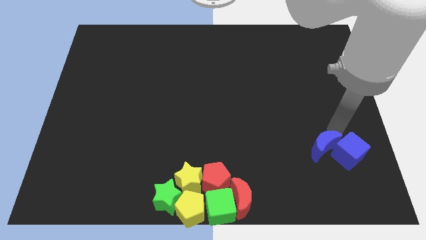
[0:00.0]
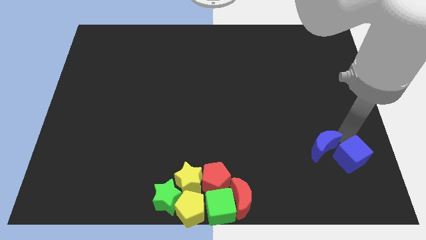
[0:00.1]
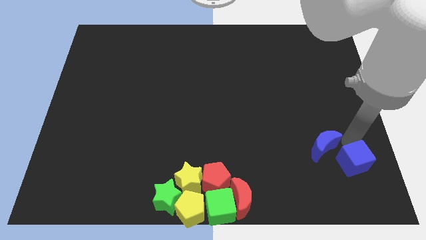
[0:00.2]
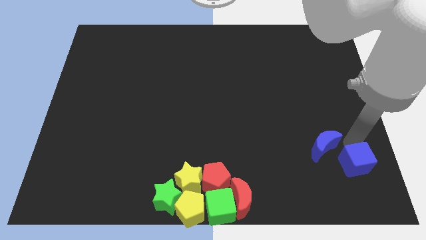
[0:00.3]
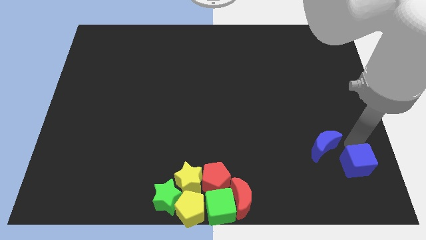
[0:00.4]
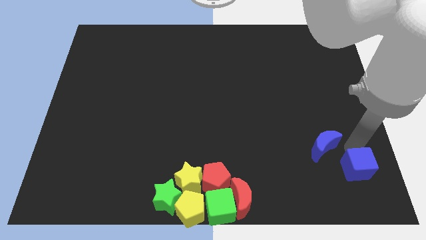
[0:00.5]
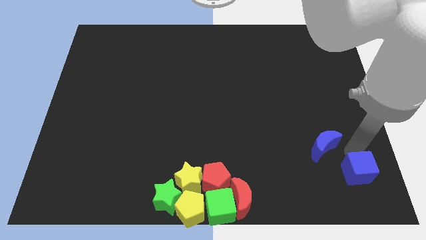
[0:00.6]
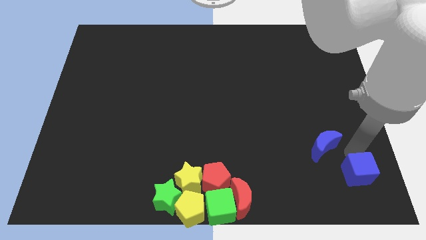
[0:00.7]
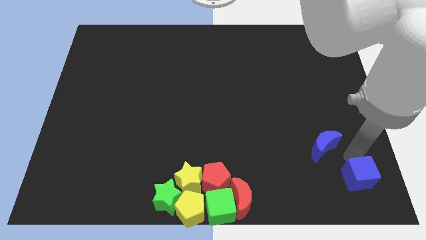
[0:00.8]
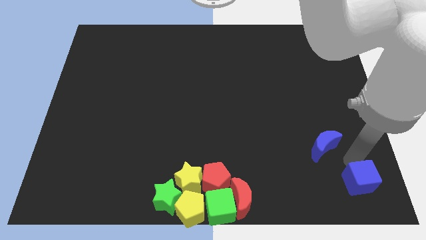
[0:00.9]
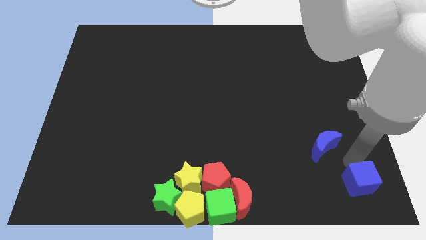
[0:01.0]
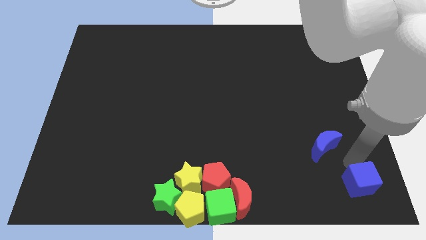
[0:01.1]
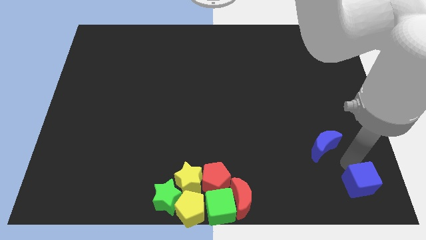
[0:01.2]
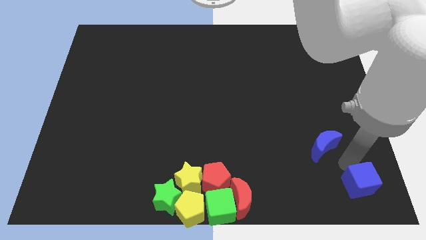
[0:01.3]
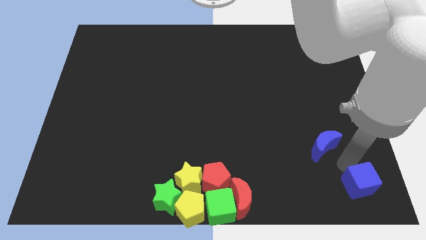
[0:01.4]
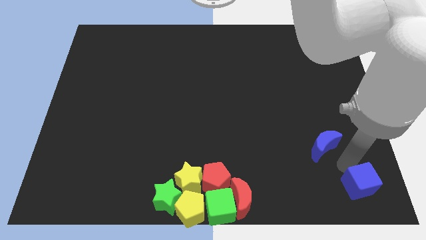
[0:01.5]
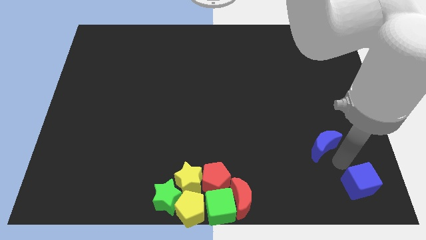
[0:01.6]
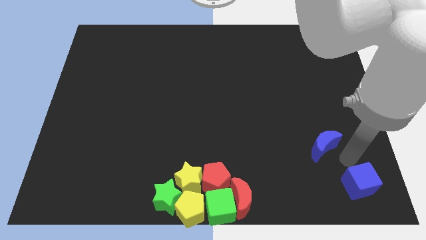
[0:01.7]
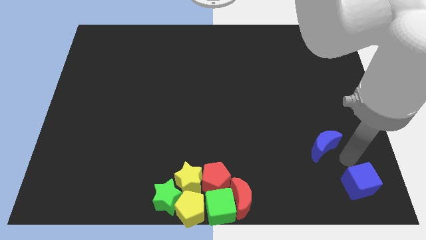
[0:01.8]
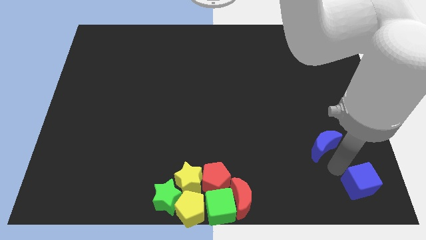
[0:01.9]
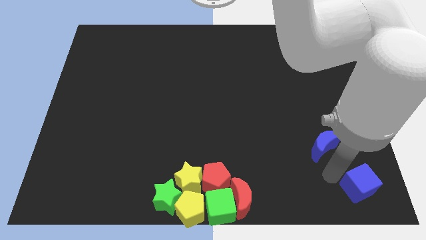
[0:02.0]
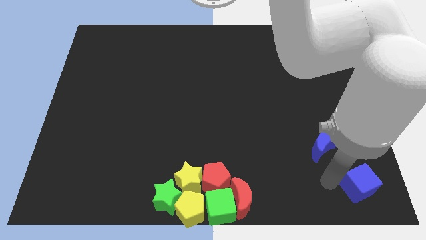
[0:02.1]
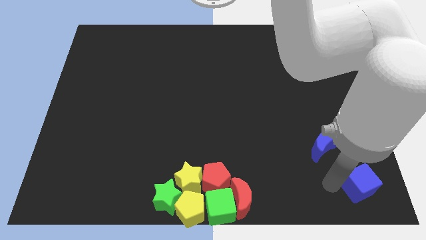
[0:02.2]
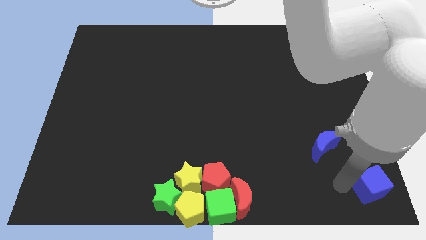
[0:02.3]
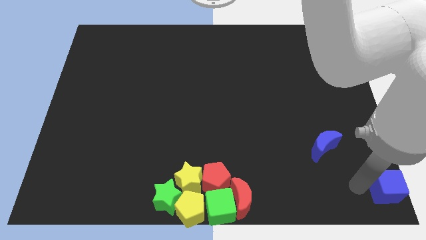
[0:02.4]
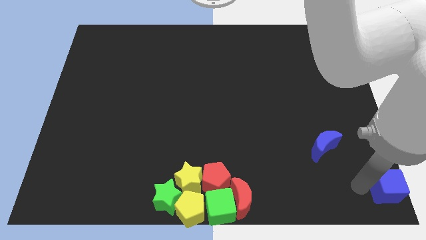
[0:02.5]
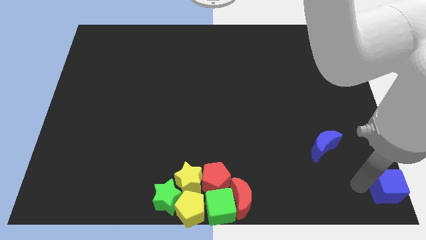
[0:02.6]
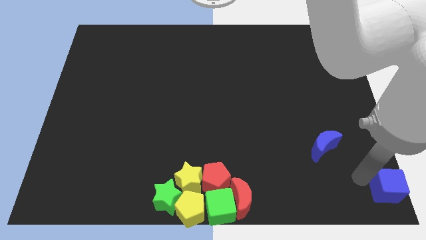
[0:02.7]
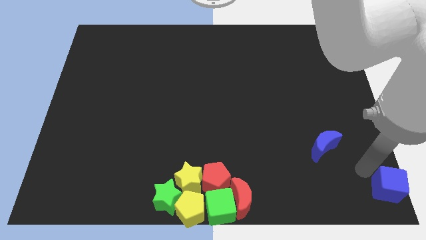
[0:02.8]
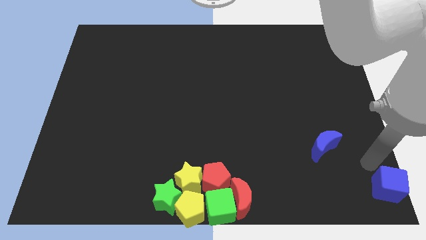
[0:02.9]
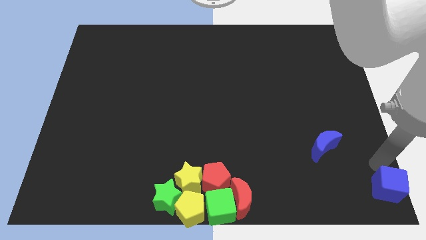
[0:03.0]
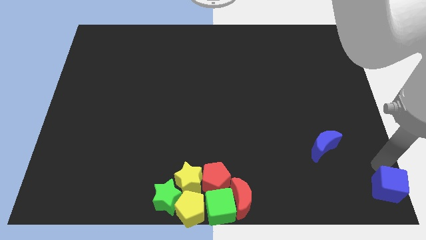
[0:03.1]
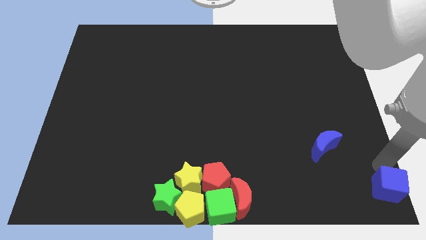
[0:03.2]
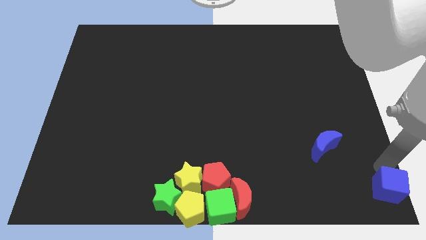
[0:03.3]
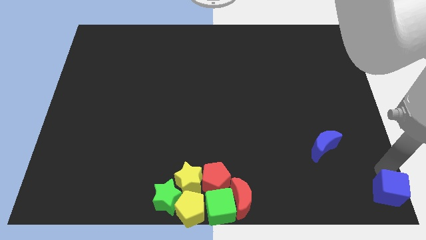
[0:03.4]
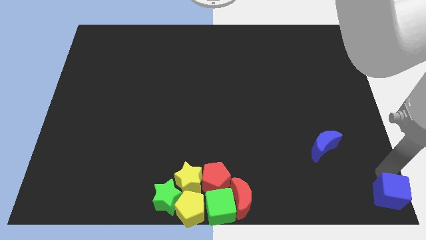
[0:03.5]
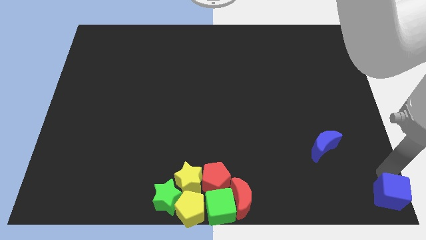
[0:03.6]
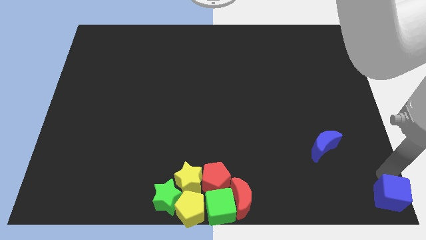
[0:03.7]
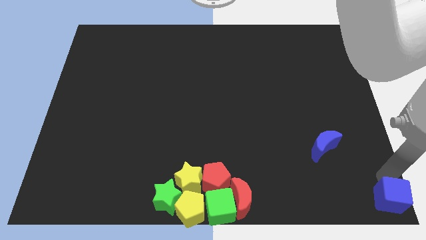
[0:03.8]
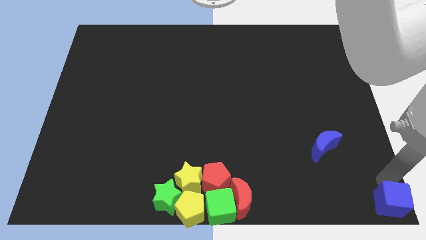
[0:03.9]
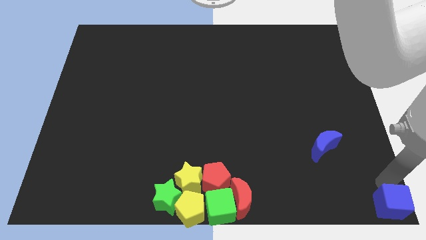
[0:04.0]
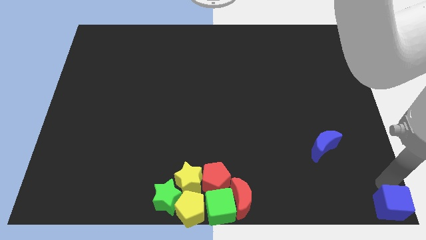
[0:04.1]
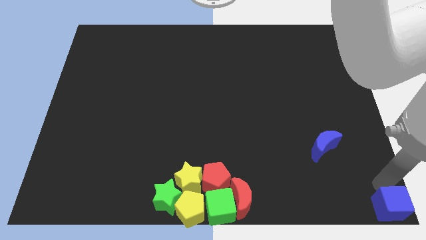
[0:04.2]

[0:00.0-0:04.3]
place the blue cube at the bottom right corner of the board

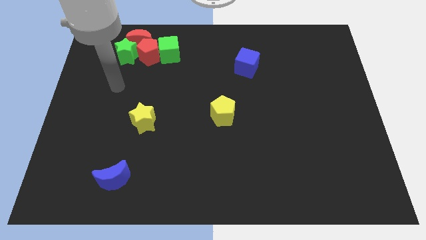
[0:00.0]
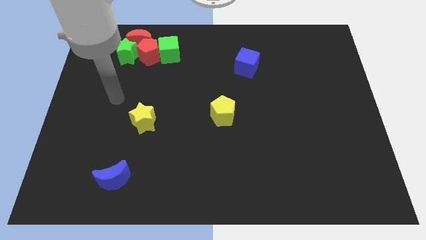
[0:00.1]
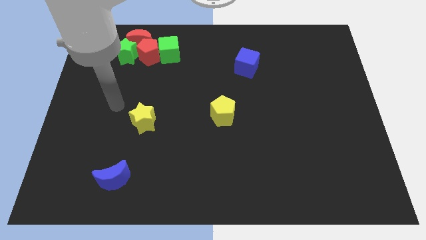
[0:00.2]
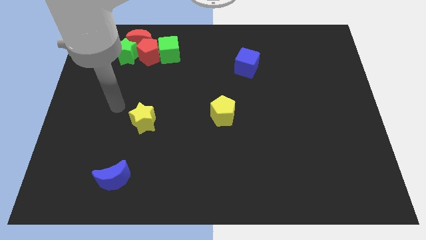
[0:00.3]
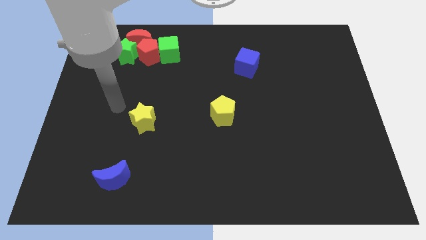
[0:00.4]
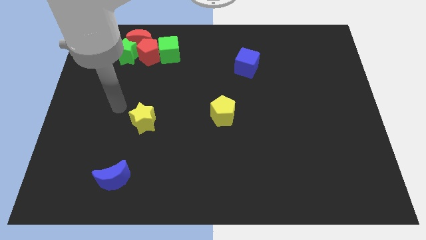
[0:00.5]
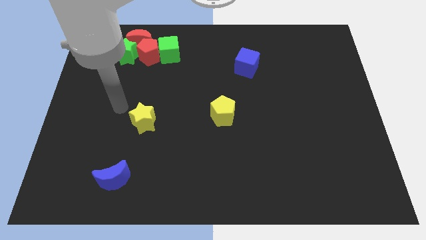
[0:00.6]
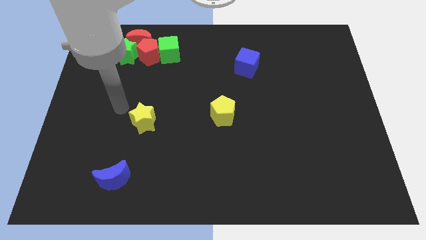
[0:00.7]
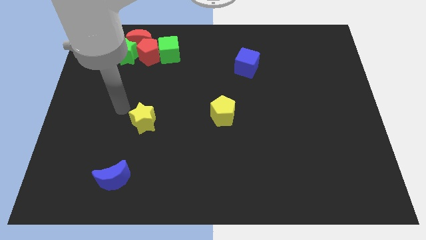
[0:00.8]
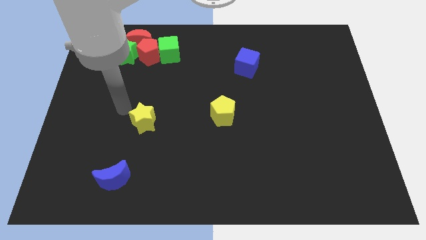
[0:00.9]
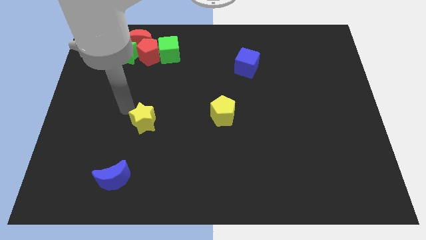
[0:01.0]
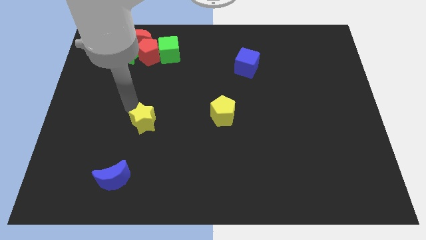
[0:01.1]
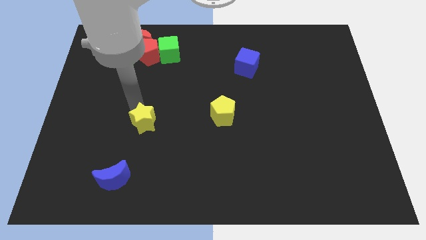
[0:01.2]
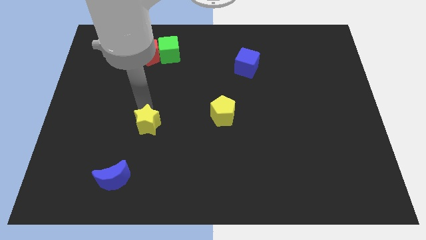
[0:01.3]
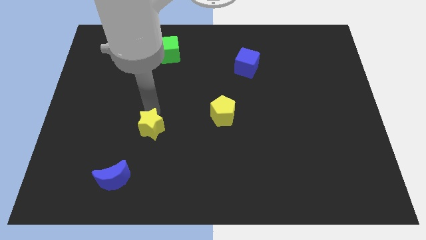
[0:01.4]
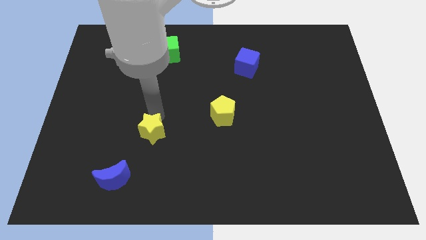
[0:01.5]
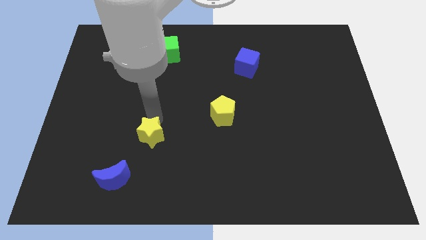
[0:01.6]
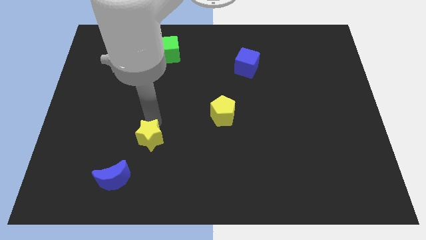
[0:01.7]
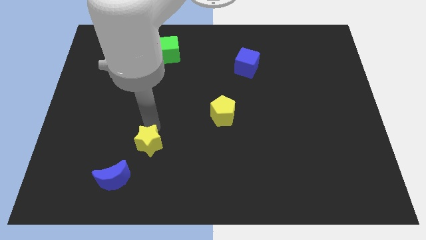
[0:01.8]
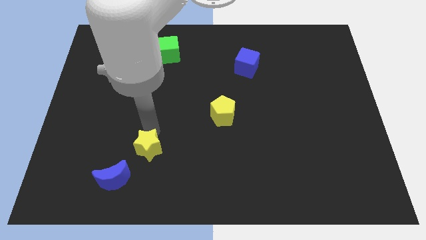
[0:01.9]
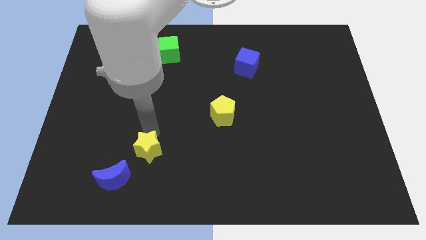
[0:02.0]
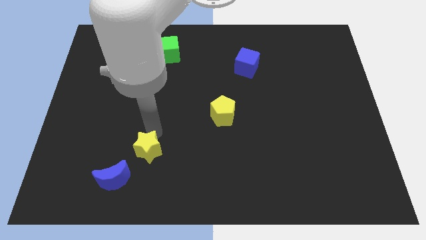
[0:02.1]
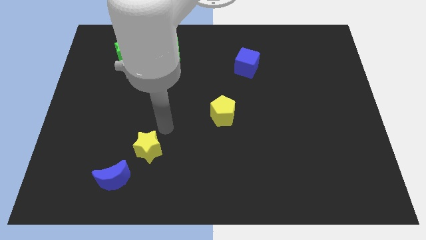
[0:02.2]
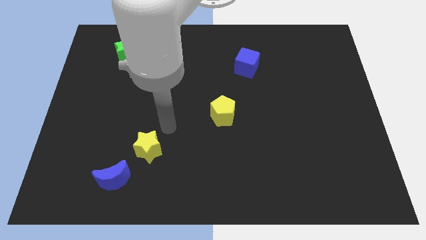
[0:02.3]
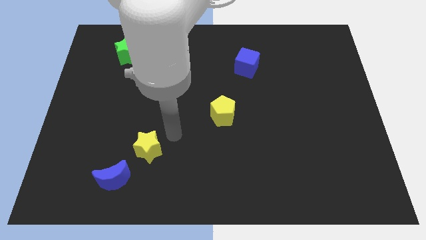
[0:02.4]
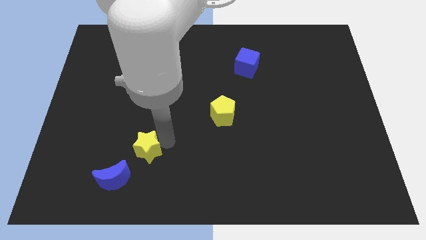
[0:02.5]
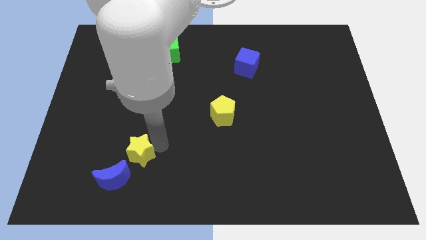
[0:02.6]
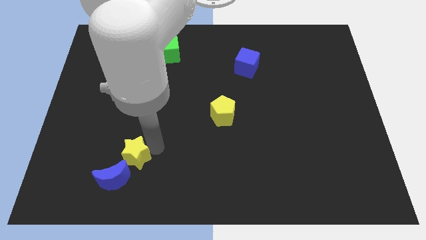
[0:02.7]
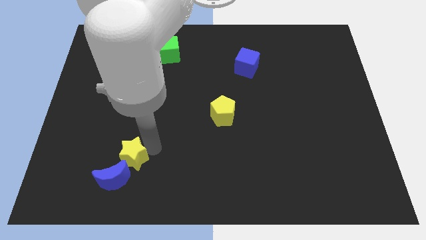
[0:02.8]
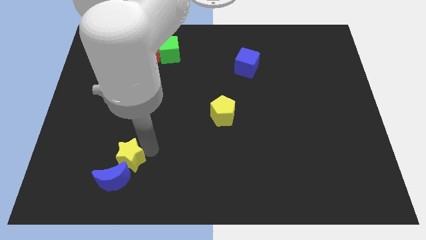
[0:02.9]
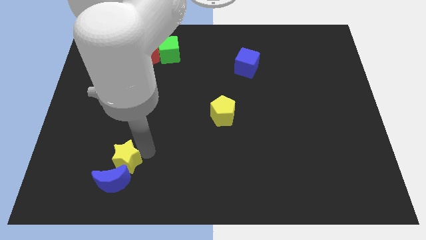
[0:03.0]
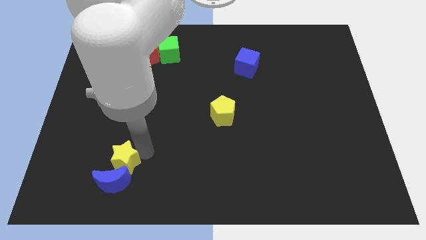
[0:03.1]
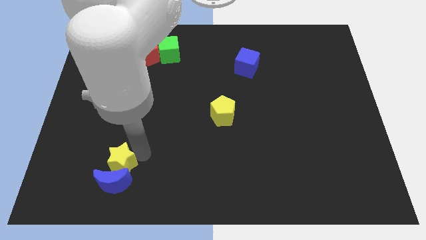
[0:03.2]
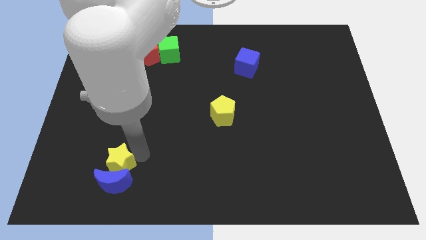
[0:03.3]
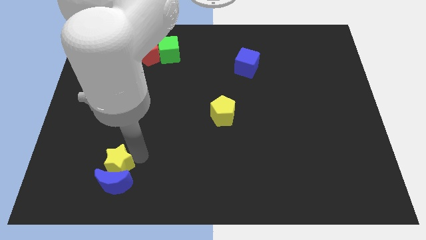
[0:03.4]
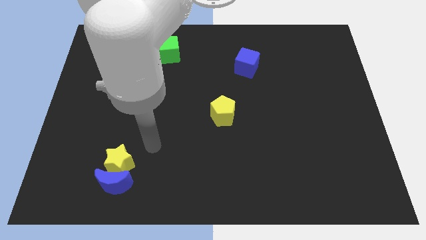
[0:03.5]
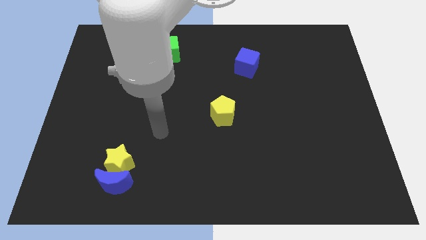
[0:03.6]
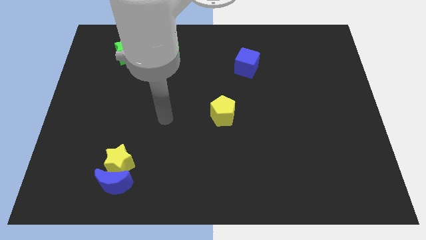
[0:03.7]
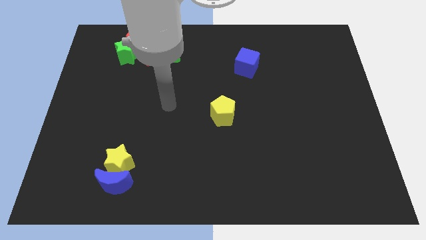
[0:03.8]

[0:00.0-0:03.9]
move the yellow star into the blue crescent

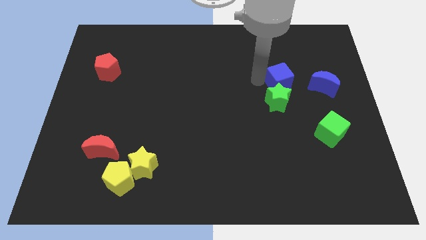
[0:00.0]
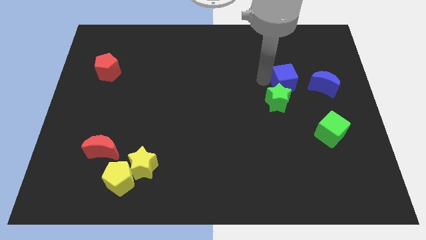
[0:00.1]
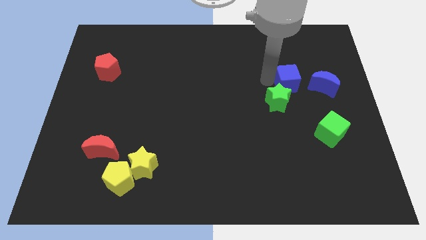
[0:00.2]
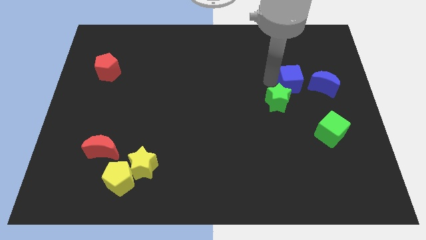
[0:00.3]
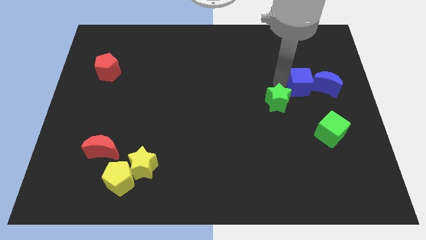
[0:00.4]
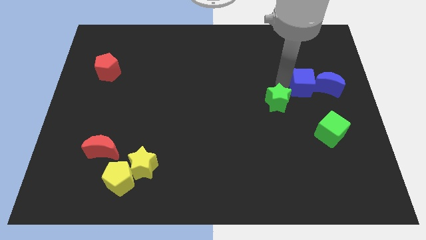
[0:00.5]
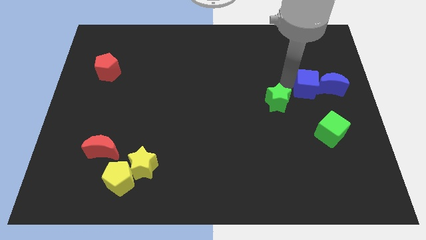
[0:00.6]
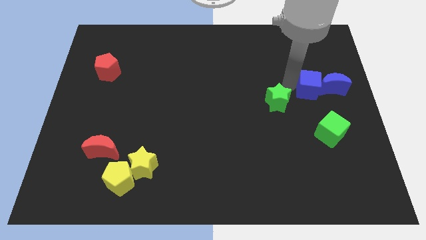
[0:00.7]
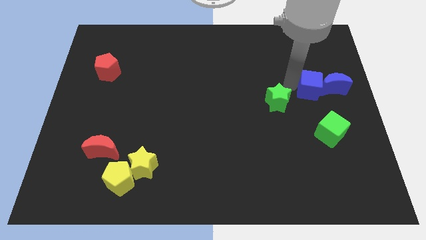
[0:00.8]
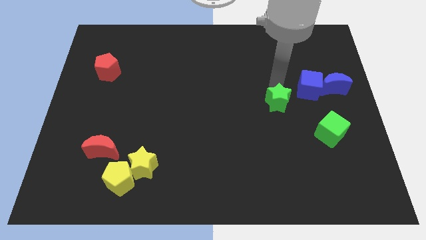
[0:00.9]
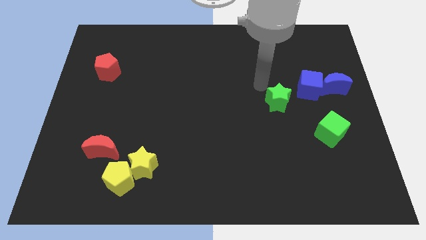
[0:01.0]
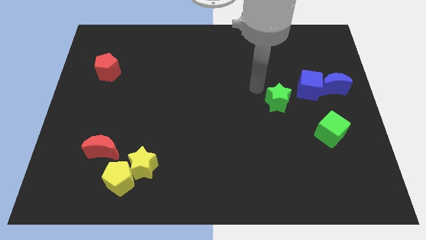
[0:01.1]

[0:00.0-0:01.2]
slide the blue cube into the blue moon
